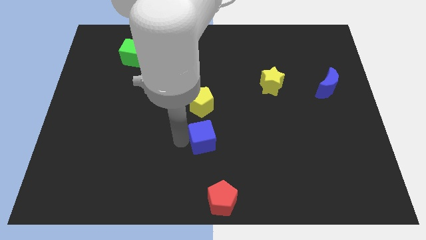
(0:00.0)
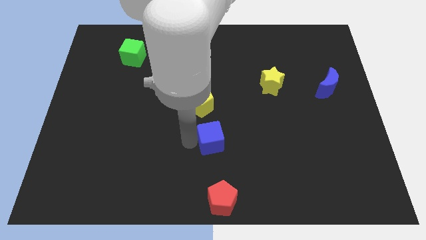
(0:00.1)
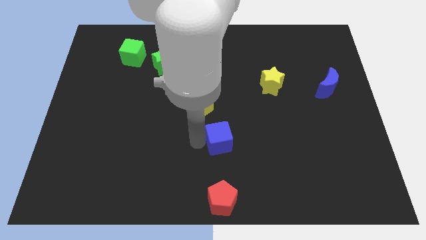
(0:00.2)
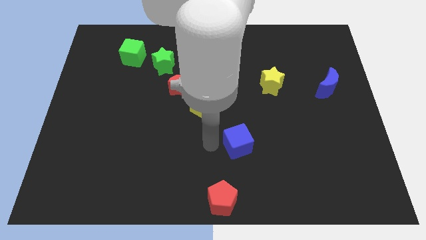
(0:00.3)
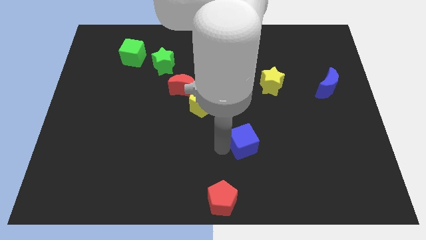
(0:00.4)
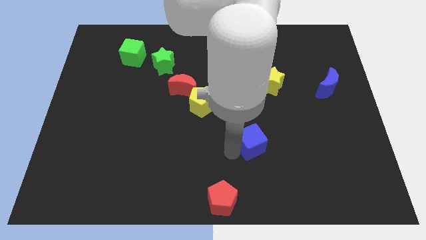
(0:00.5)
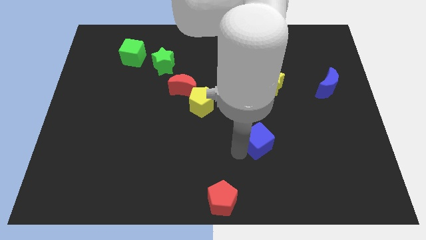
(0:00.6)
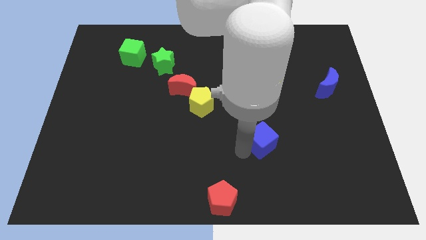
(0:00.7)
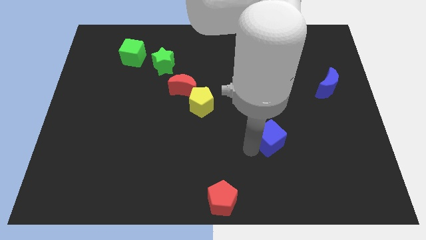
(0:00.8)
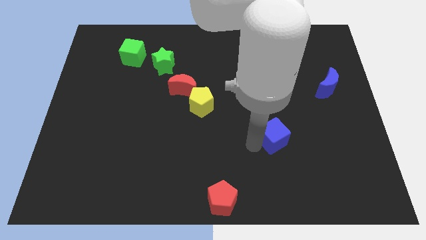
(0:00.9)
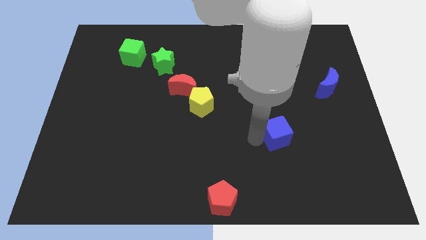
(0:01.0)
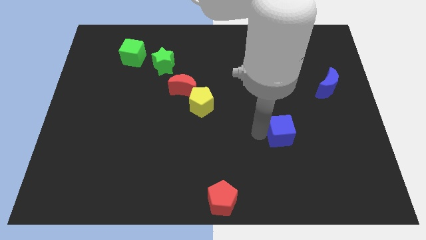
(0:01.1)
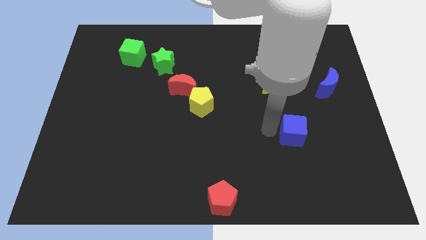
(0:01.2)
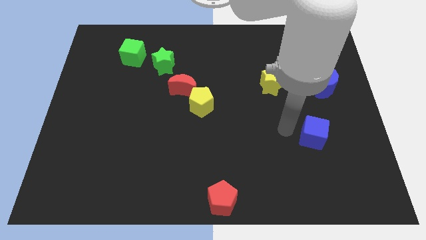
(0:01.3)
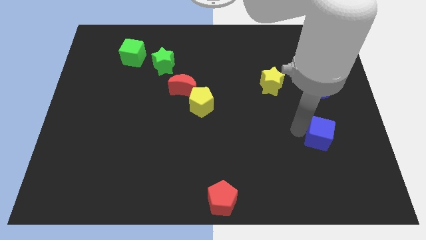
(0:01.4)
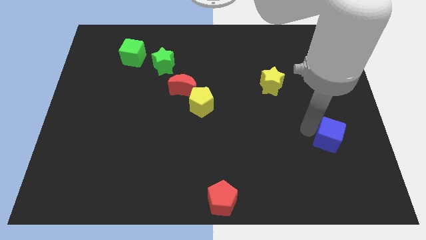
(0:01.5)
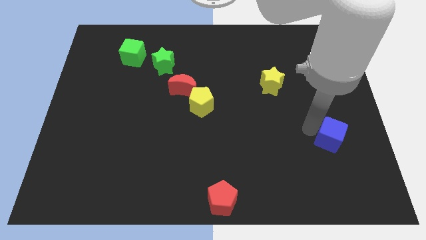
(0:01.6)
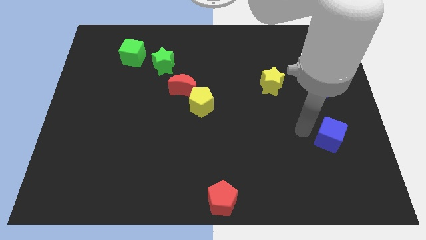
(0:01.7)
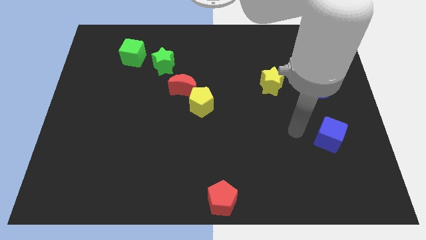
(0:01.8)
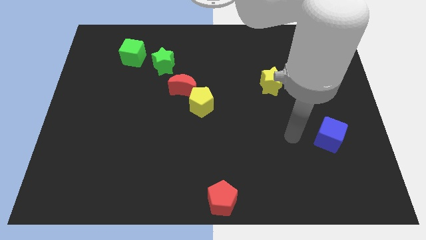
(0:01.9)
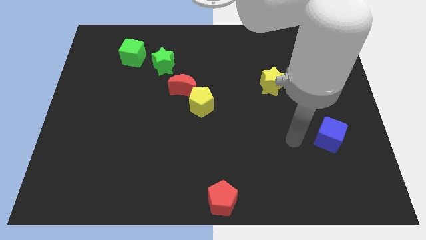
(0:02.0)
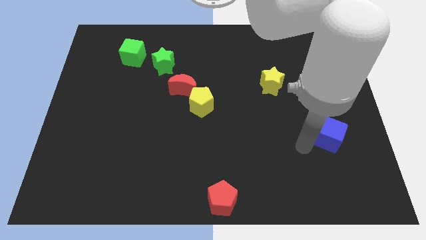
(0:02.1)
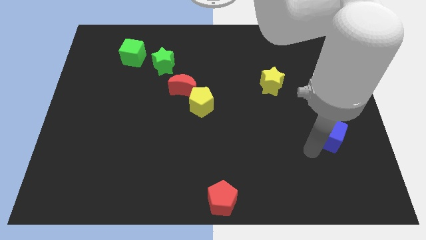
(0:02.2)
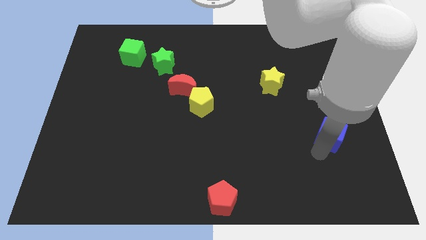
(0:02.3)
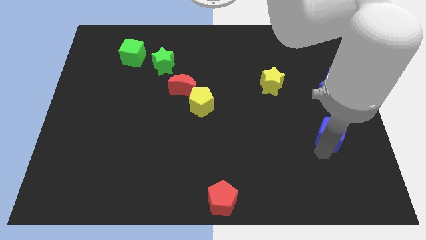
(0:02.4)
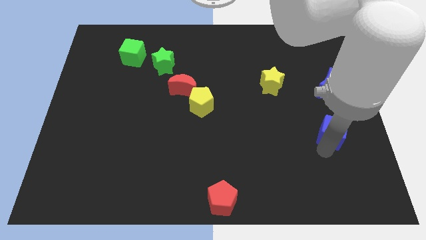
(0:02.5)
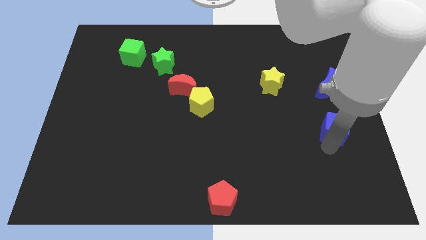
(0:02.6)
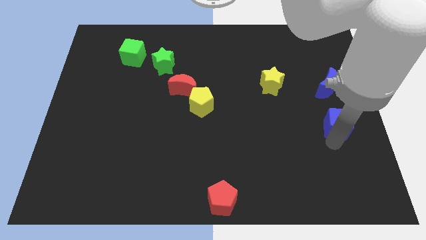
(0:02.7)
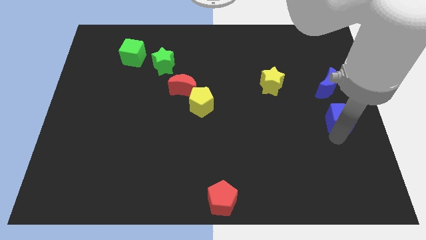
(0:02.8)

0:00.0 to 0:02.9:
place blue cube at the bottom side of the blue crescent

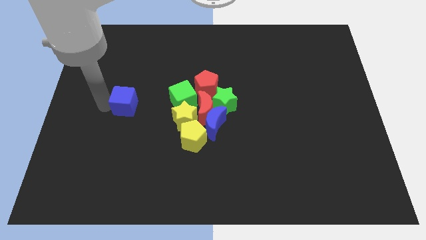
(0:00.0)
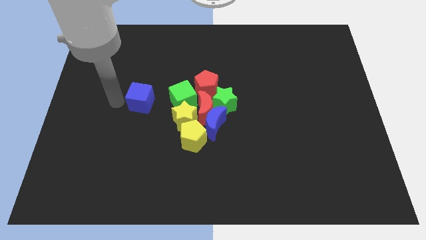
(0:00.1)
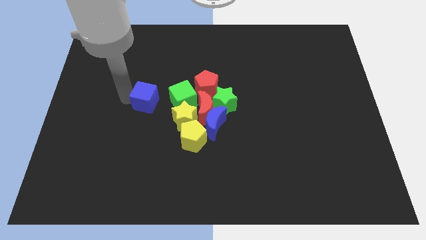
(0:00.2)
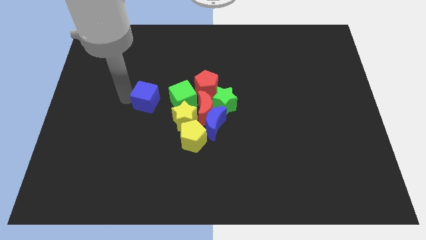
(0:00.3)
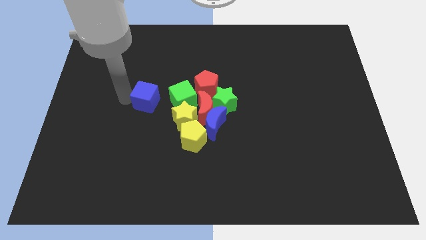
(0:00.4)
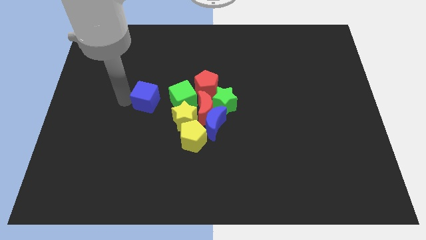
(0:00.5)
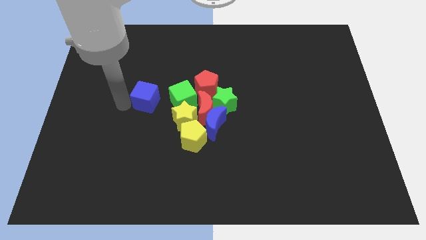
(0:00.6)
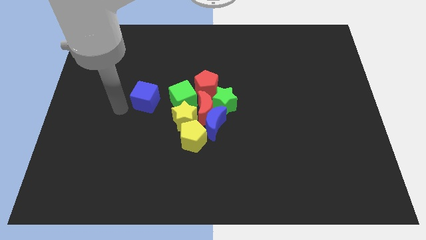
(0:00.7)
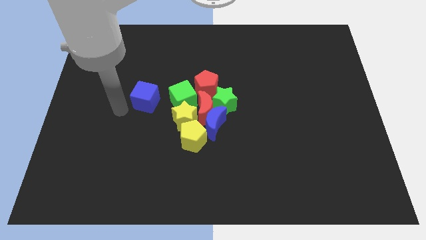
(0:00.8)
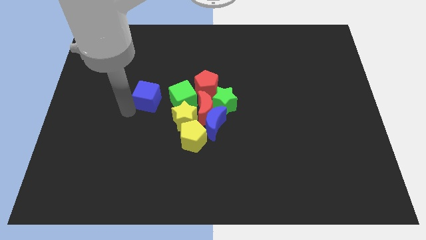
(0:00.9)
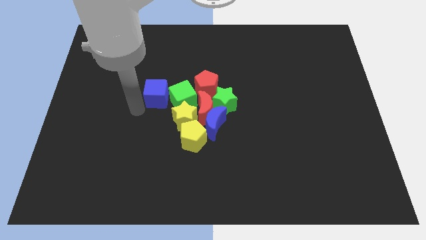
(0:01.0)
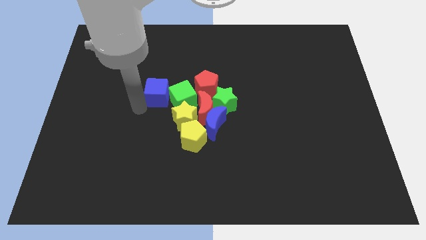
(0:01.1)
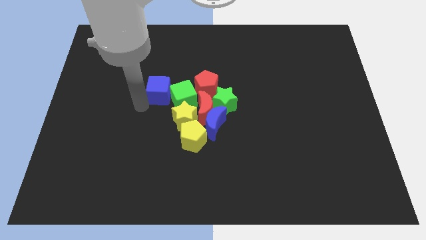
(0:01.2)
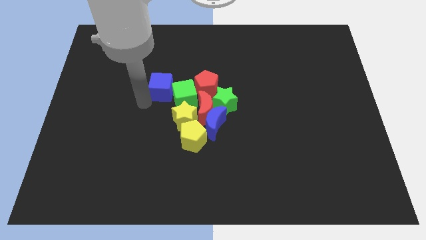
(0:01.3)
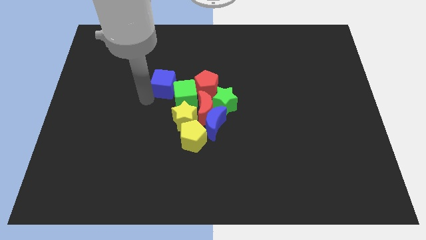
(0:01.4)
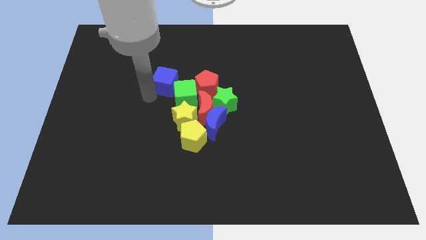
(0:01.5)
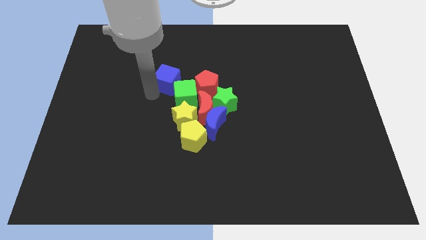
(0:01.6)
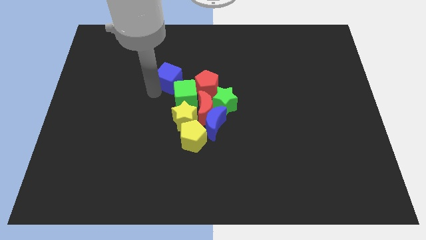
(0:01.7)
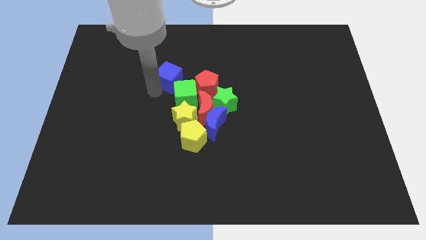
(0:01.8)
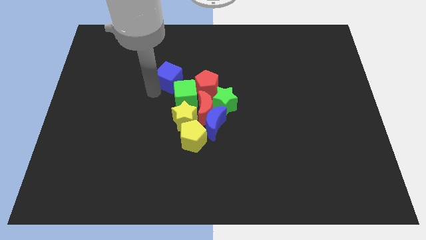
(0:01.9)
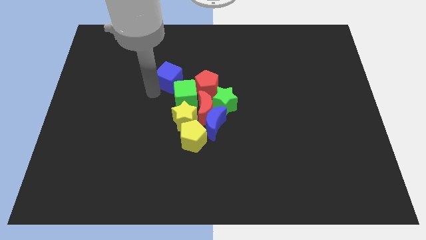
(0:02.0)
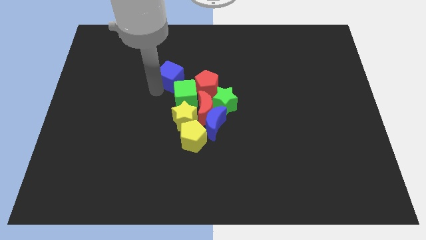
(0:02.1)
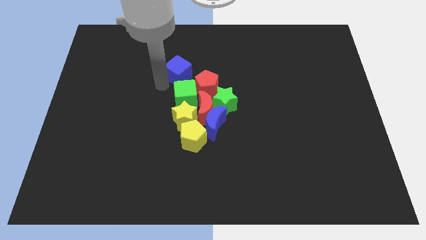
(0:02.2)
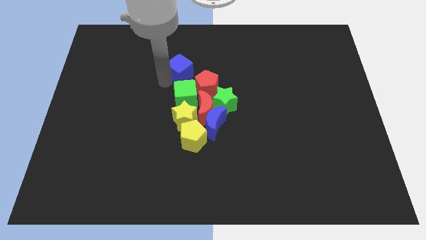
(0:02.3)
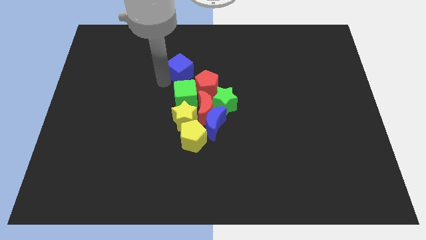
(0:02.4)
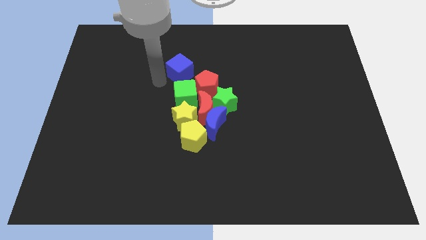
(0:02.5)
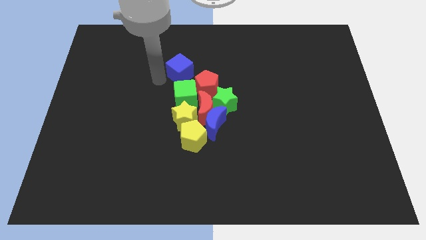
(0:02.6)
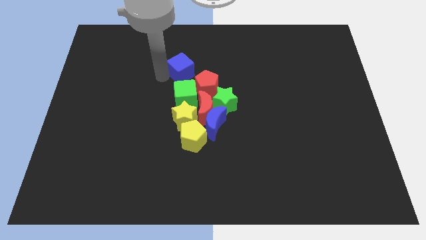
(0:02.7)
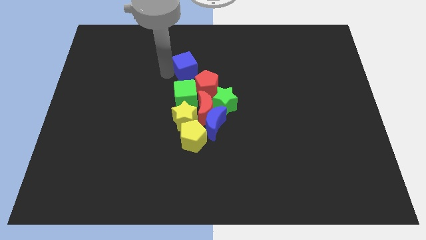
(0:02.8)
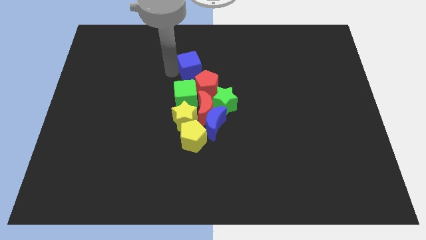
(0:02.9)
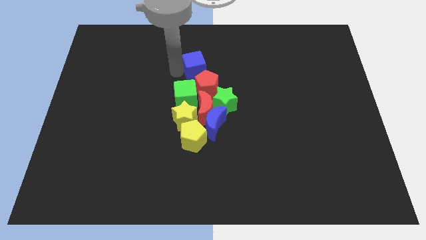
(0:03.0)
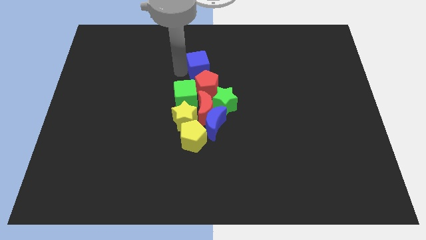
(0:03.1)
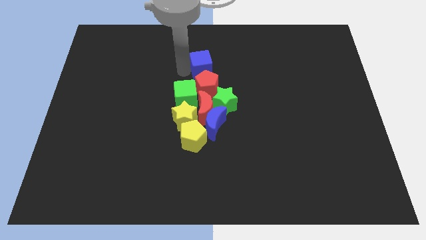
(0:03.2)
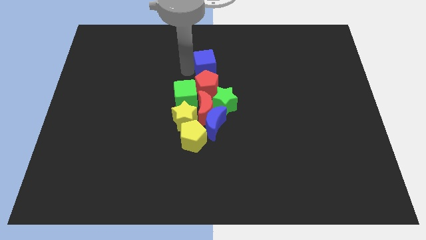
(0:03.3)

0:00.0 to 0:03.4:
move the blue cube above the red pentagon

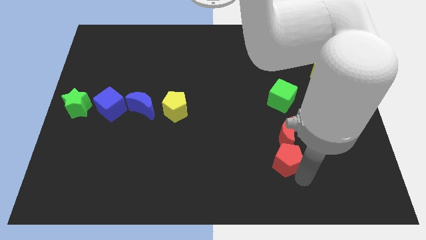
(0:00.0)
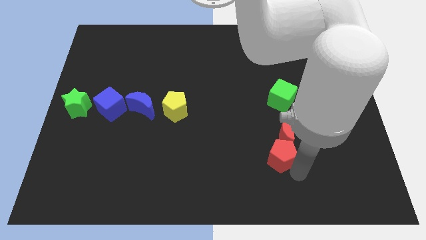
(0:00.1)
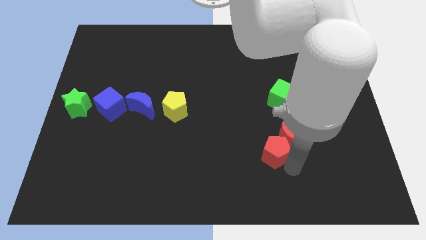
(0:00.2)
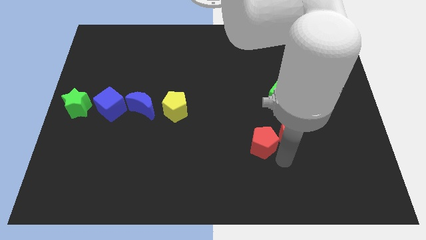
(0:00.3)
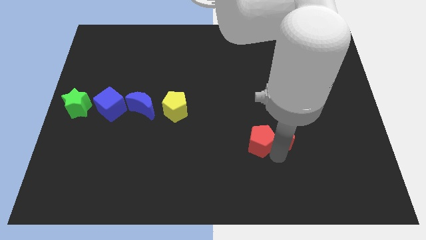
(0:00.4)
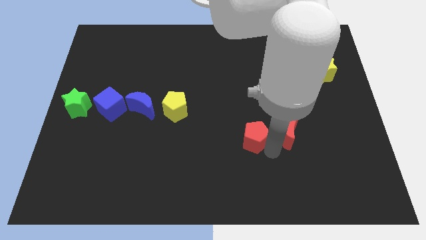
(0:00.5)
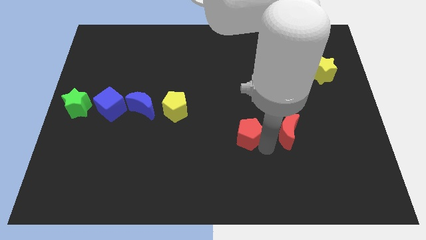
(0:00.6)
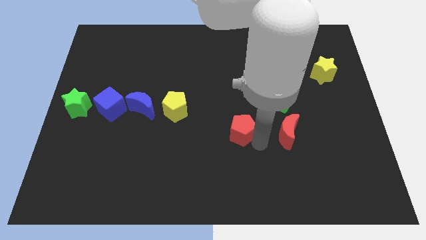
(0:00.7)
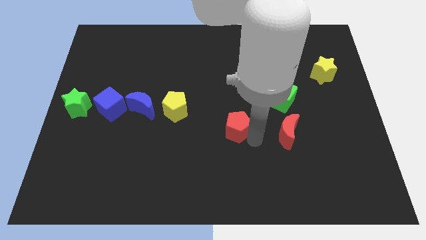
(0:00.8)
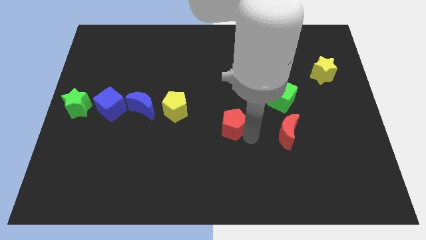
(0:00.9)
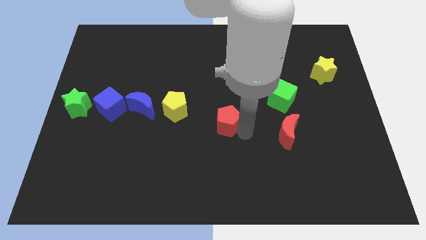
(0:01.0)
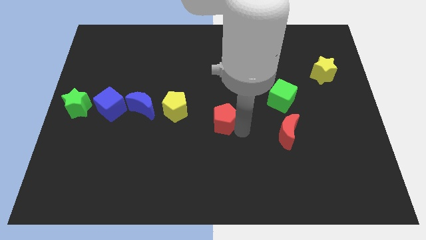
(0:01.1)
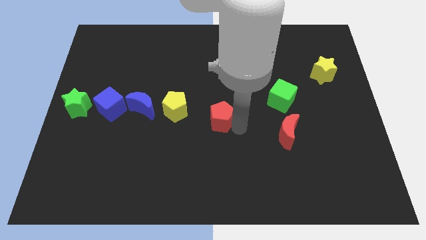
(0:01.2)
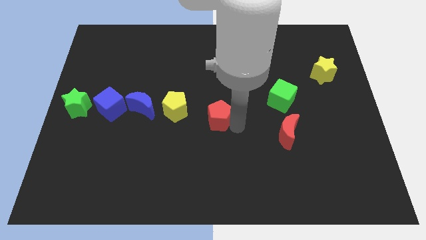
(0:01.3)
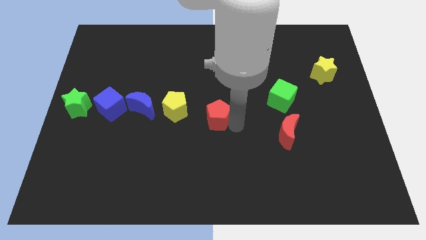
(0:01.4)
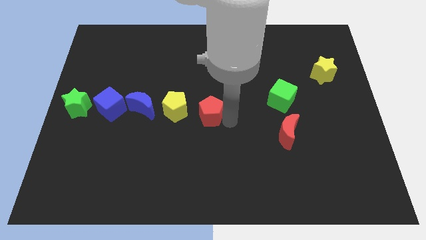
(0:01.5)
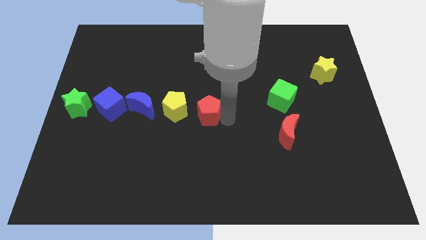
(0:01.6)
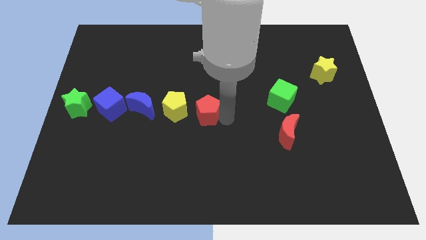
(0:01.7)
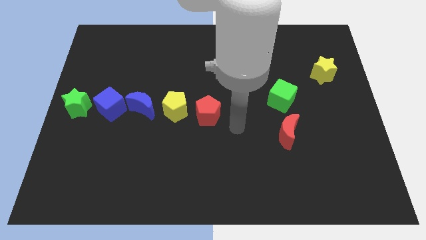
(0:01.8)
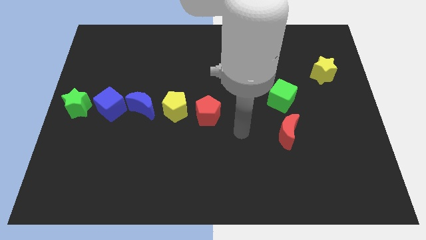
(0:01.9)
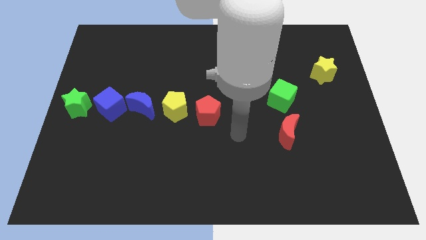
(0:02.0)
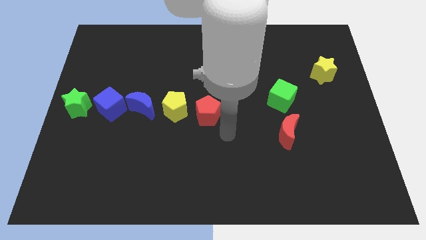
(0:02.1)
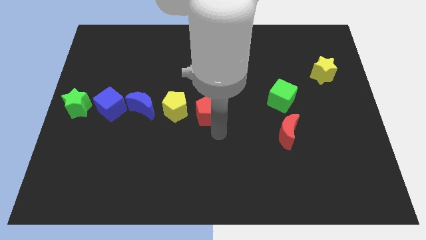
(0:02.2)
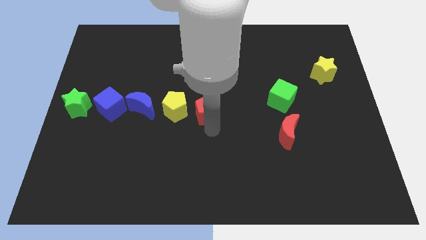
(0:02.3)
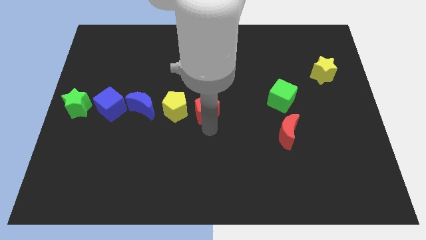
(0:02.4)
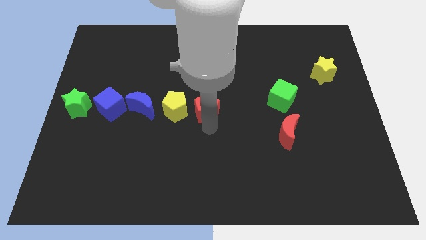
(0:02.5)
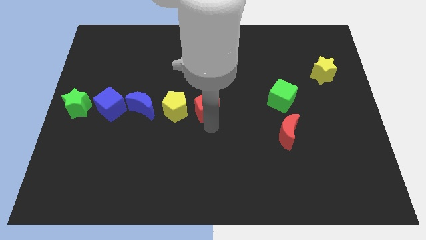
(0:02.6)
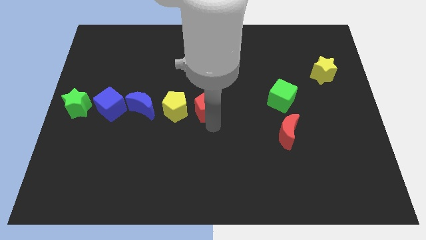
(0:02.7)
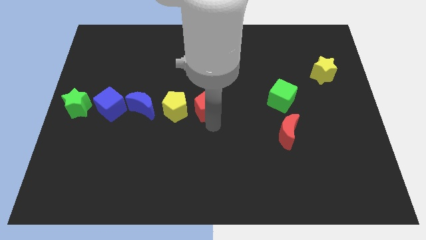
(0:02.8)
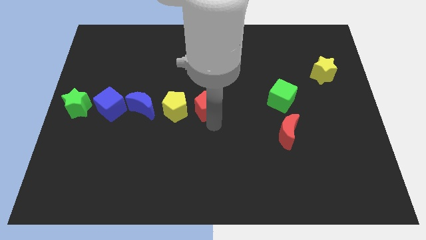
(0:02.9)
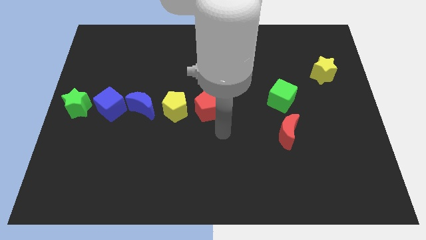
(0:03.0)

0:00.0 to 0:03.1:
place the red pentagon right to the yellow pentagon
